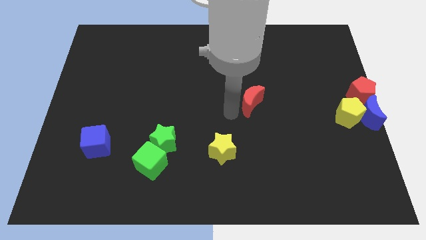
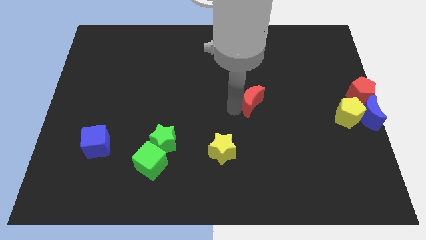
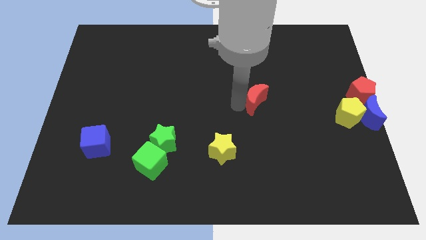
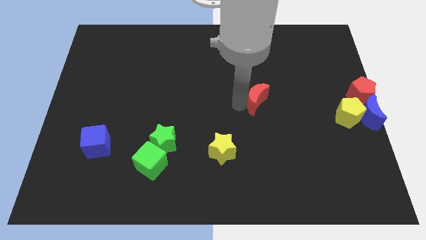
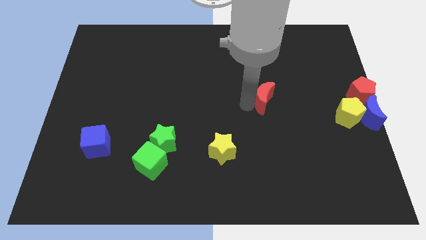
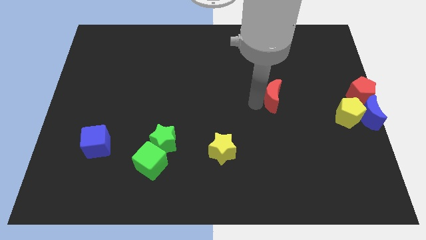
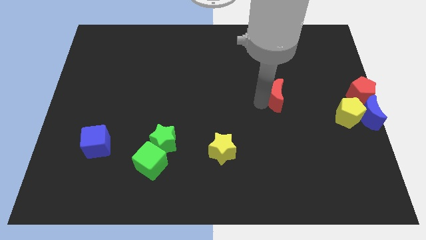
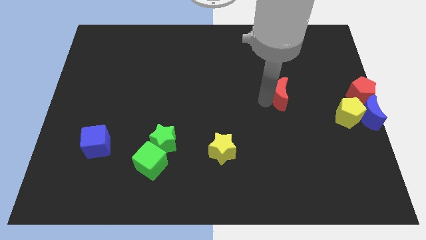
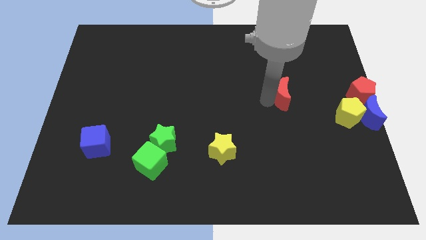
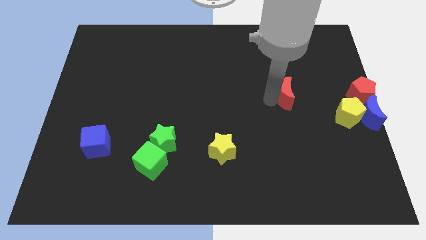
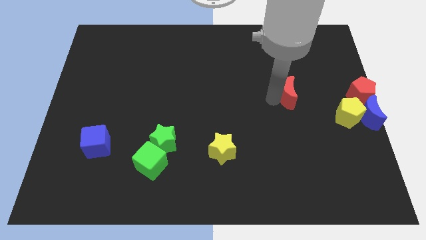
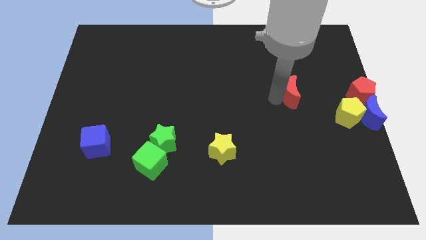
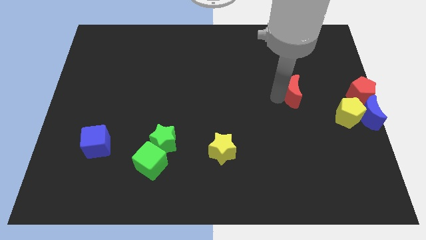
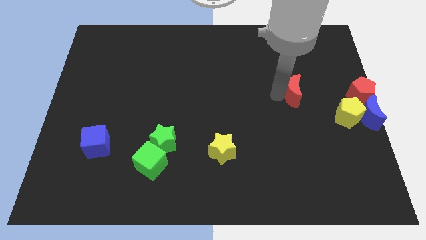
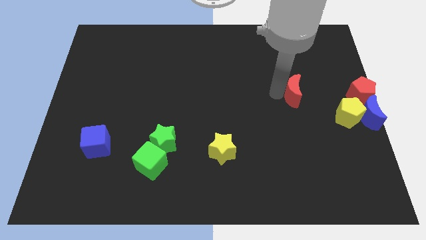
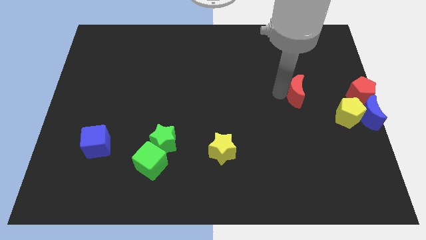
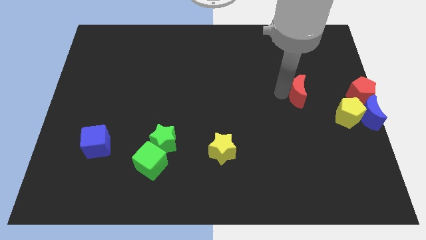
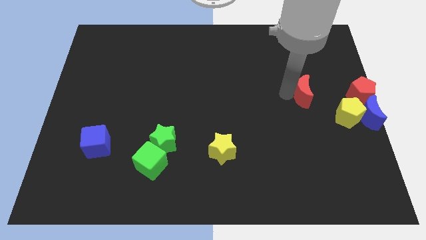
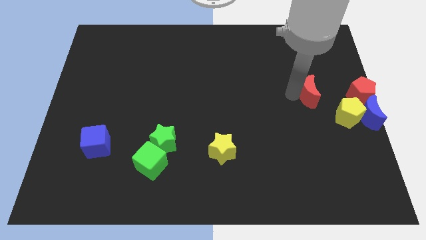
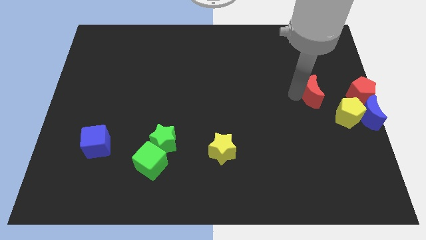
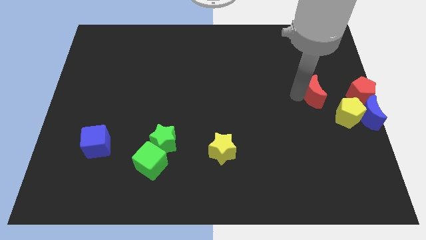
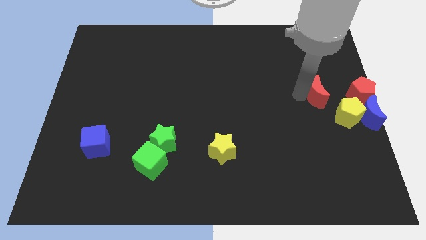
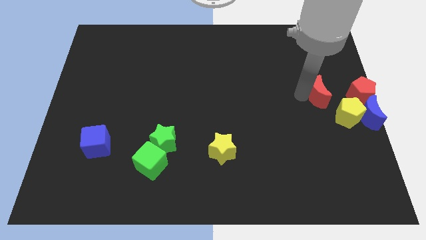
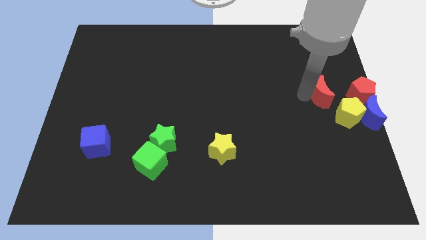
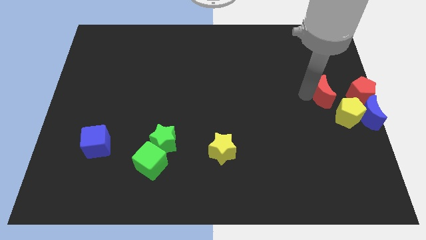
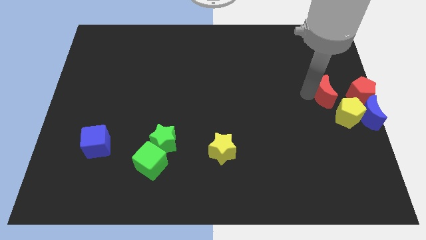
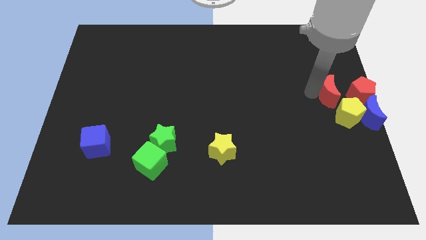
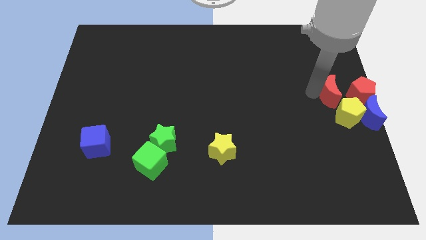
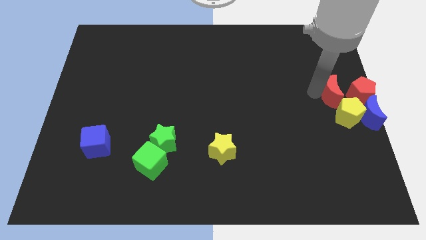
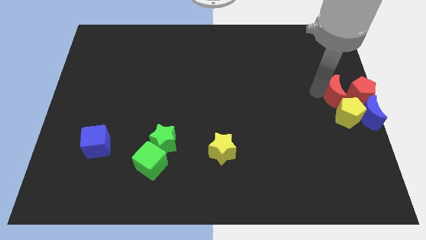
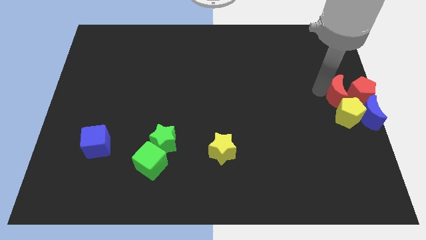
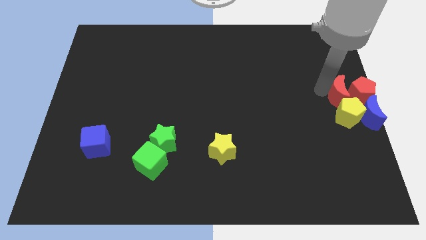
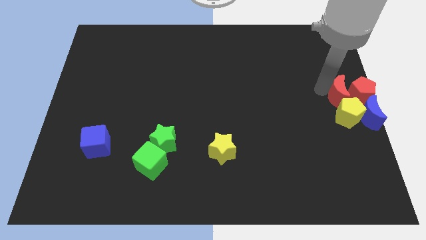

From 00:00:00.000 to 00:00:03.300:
push the red crescent to the top of the yellow pentagon

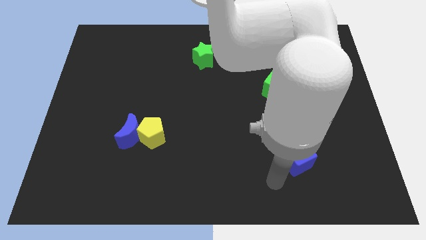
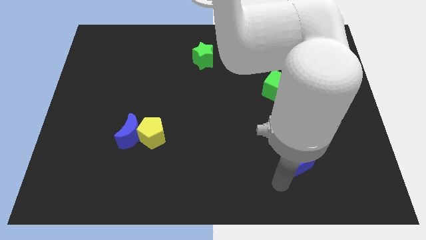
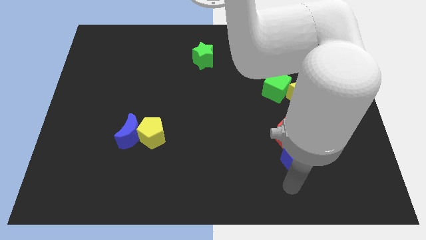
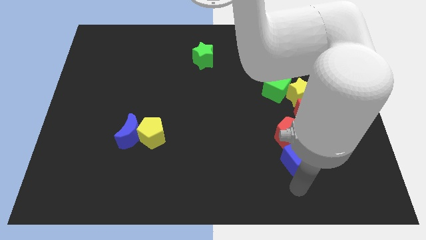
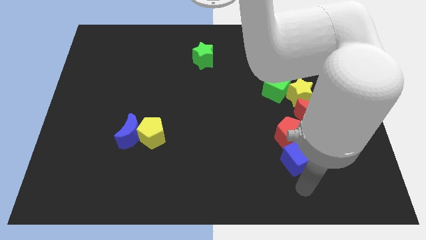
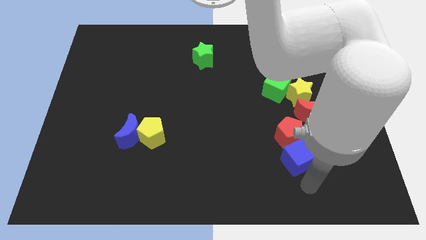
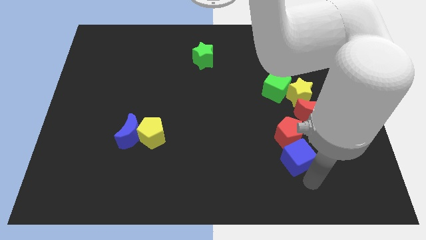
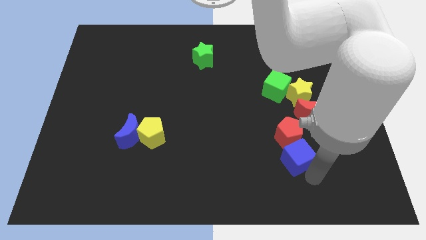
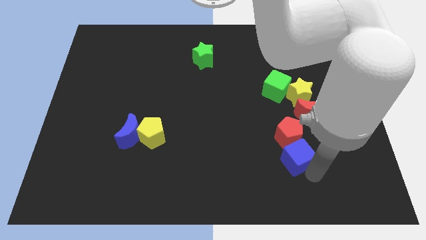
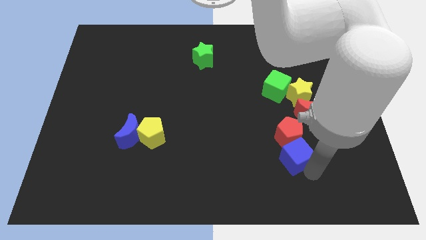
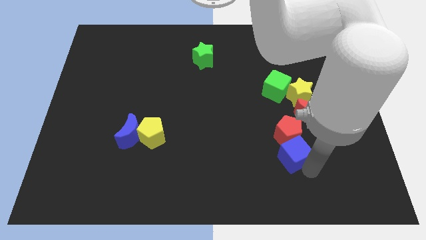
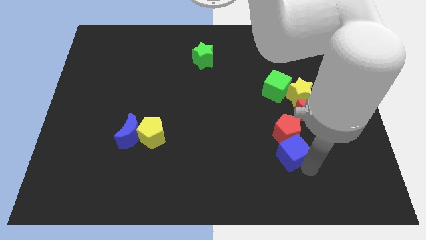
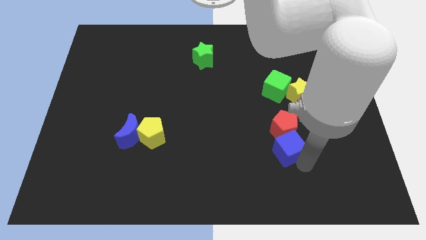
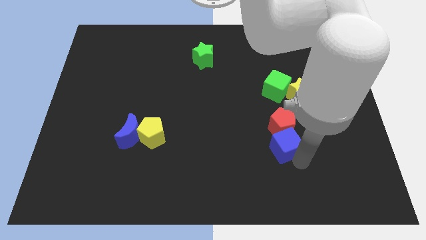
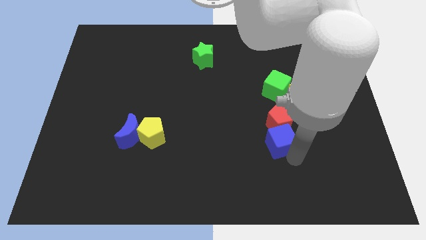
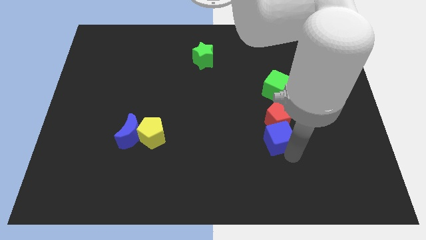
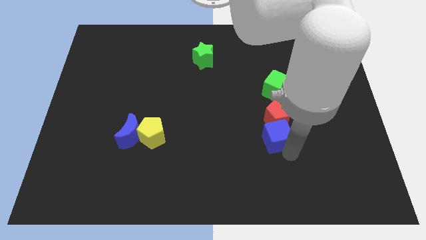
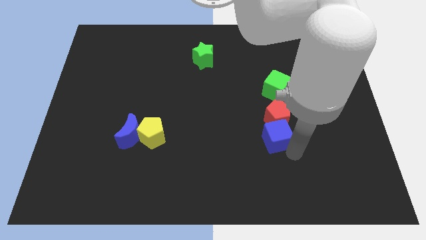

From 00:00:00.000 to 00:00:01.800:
push the blue cube into the red pentagon from the bottom

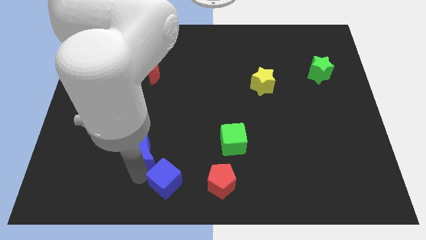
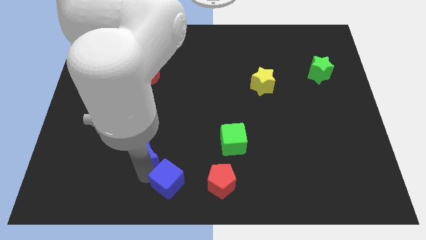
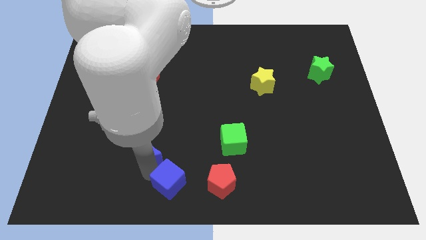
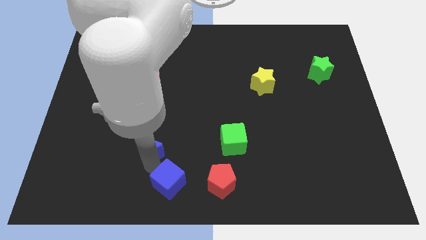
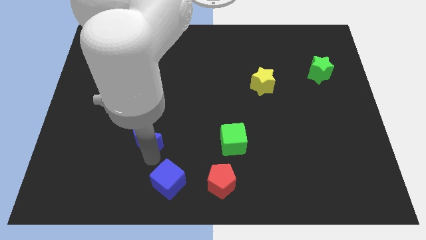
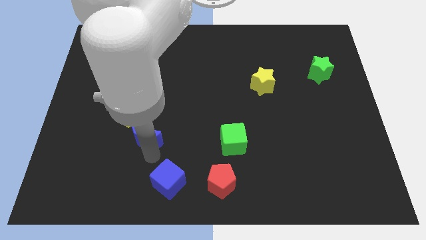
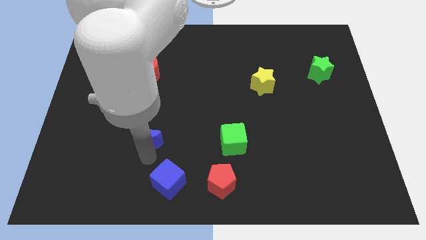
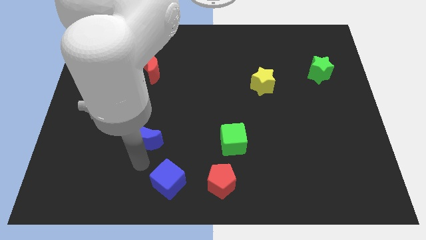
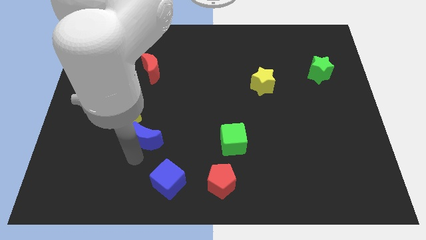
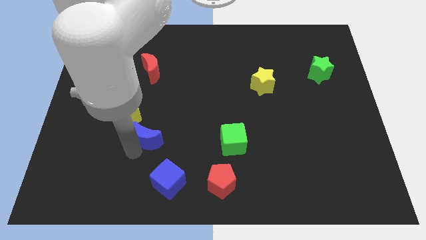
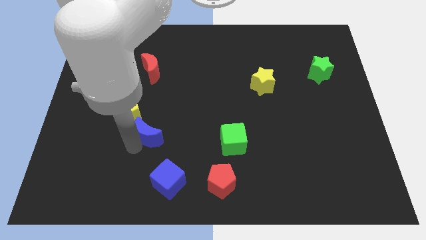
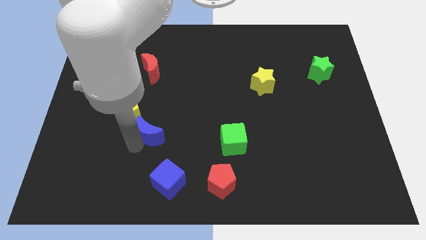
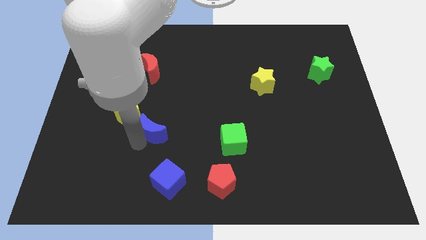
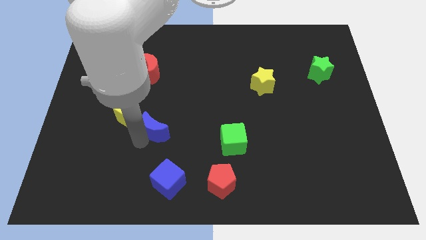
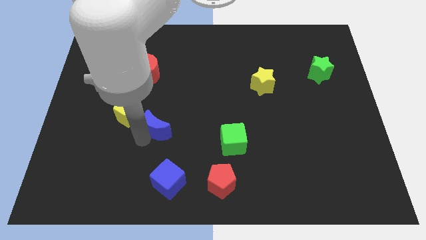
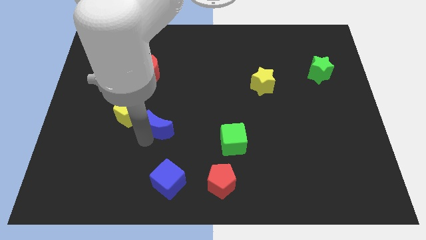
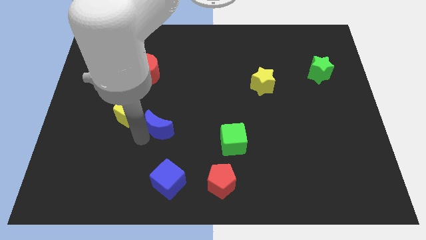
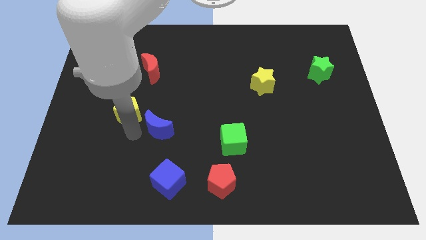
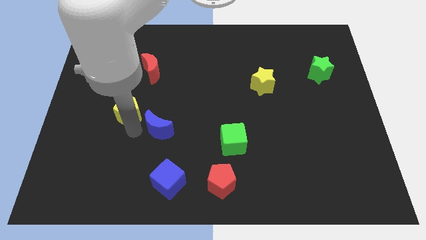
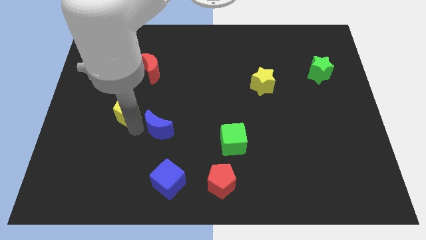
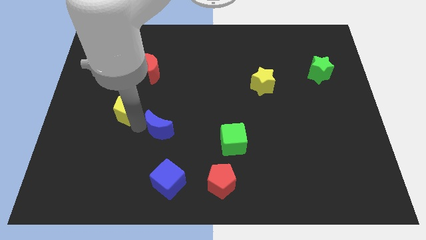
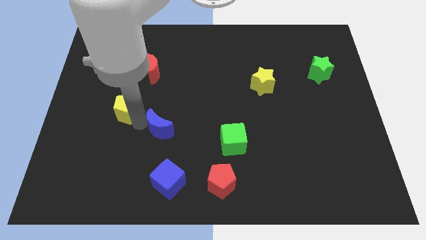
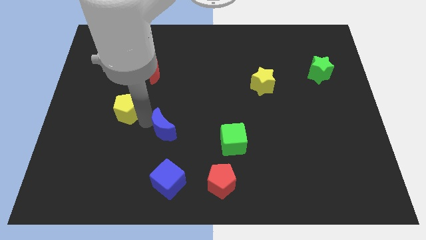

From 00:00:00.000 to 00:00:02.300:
place the red pentagon right to the blue cube

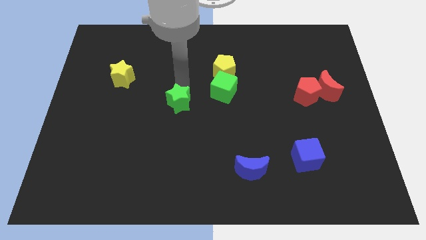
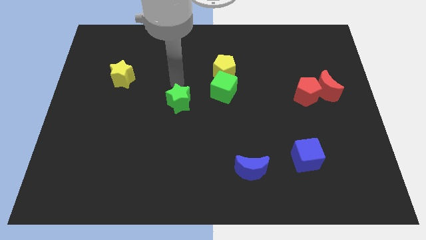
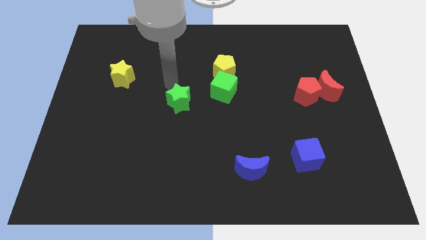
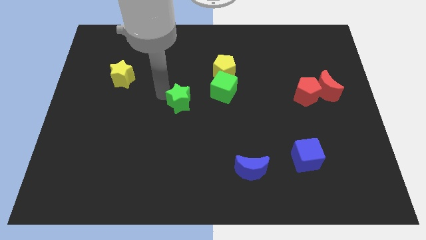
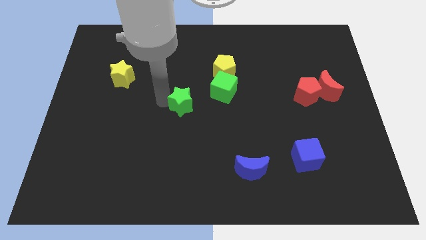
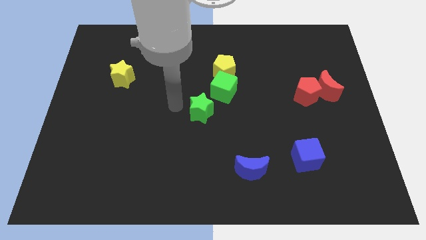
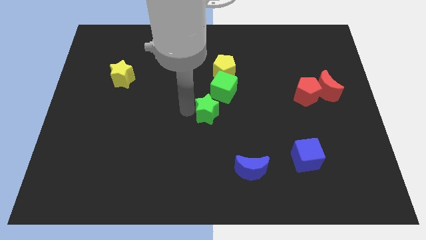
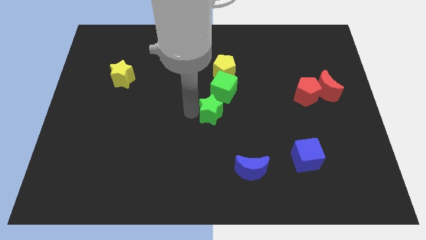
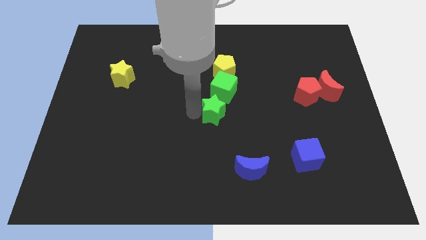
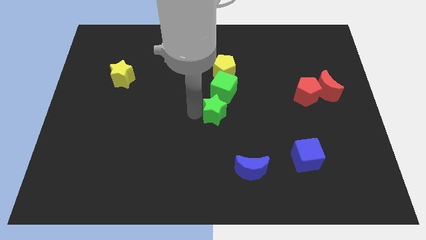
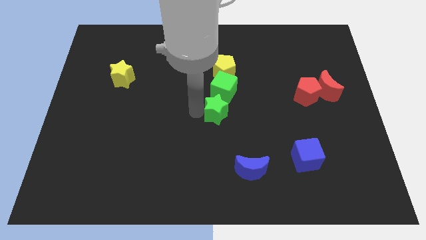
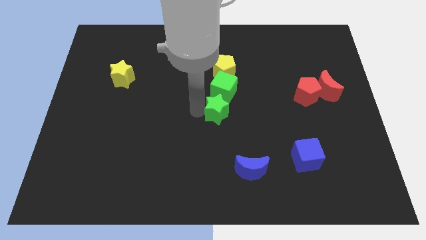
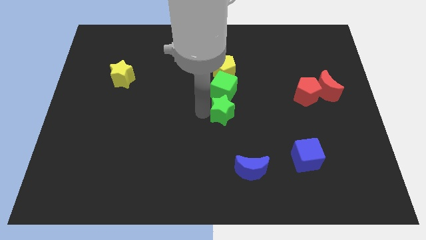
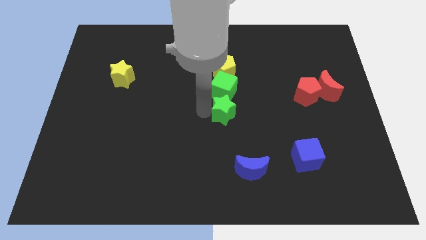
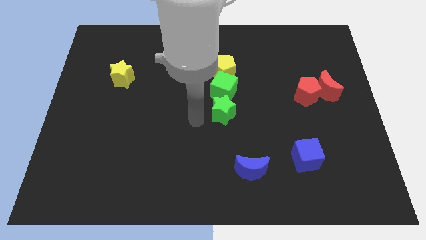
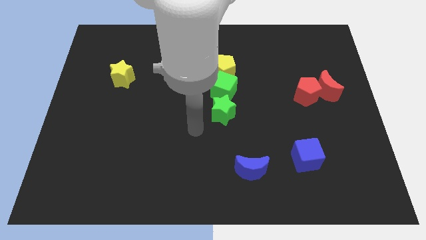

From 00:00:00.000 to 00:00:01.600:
place the green star bottom to the green cube
